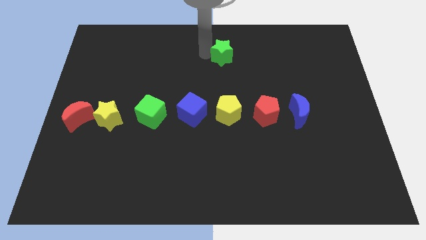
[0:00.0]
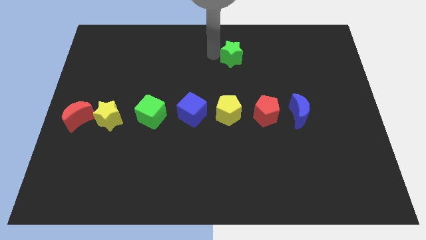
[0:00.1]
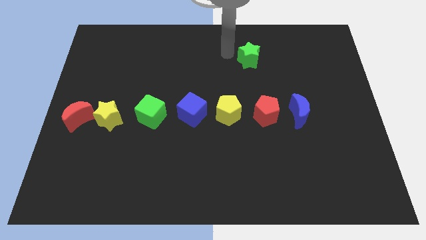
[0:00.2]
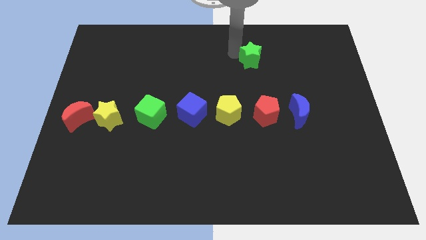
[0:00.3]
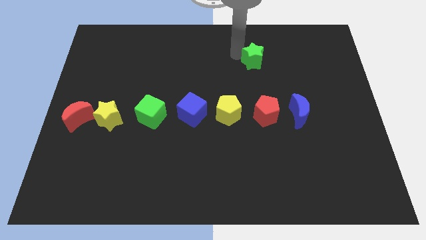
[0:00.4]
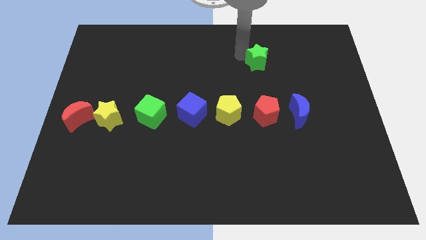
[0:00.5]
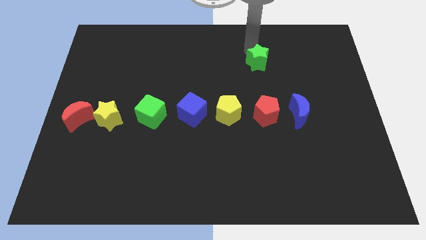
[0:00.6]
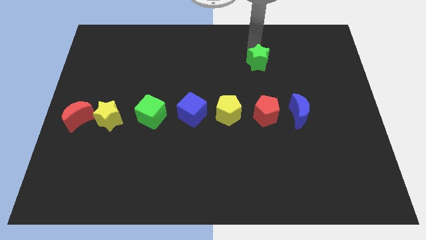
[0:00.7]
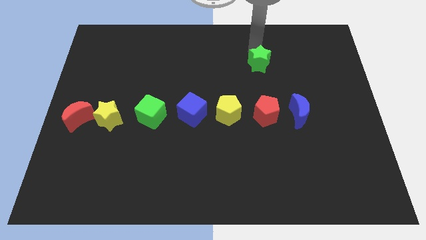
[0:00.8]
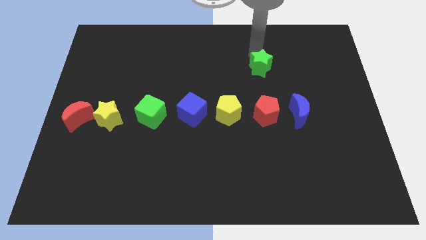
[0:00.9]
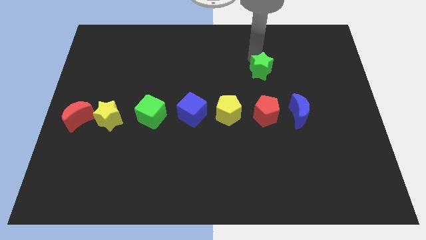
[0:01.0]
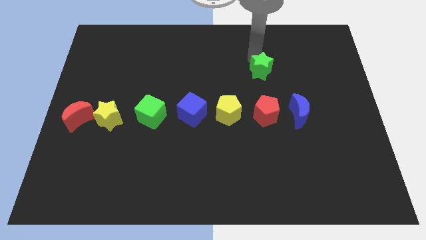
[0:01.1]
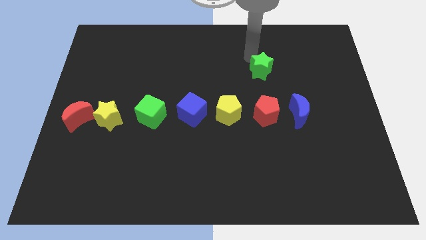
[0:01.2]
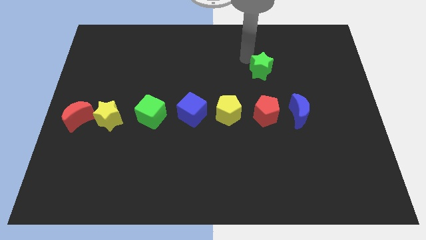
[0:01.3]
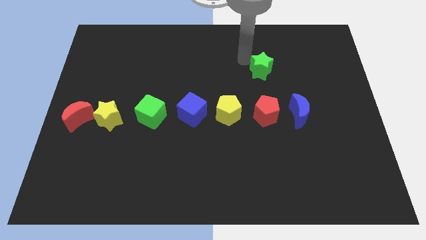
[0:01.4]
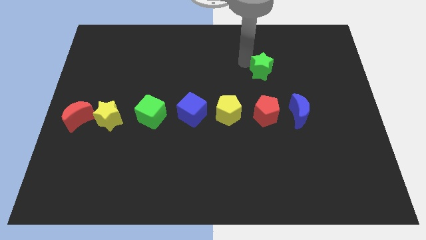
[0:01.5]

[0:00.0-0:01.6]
place the green star parallel to the red pentagon

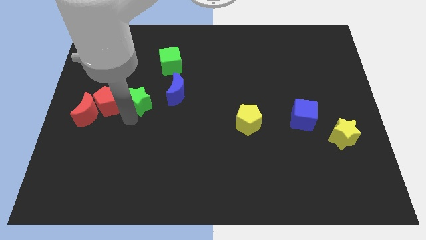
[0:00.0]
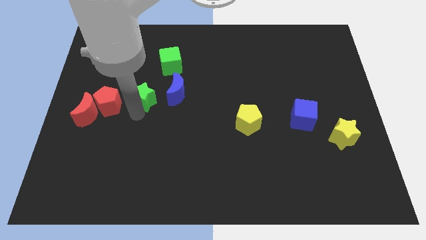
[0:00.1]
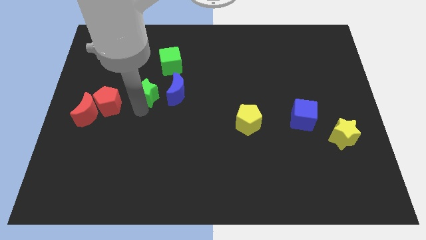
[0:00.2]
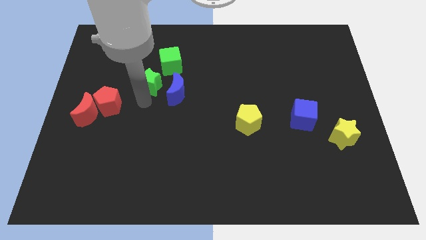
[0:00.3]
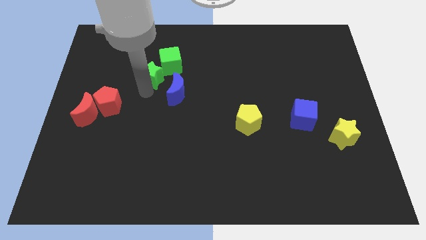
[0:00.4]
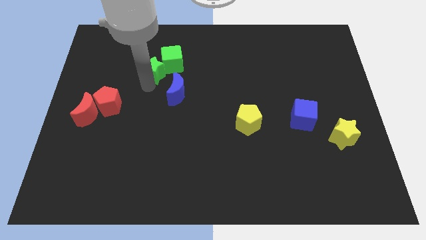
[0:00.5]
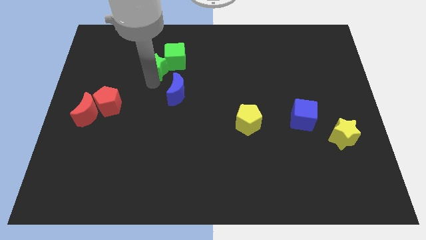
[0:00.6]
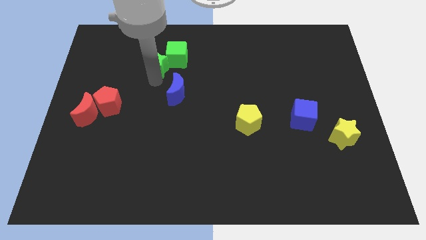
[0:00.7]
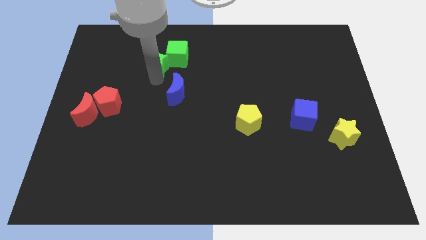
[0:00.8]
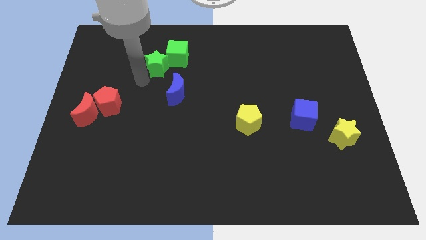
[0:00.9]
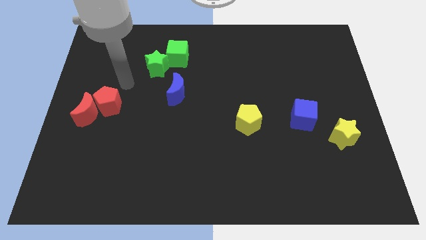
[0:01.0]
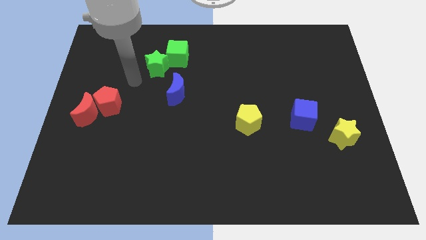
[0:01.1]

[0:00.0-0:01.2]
push the green star into the green cube

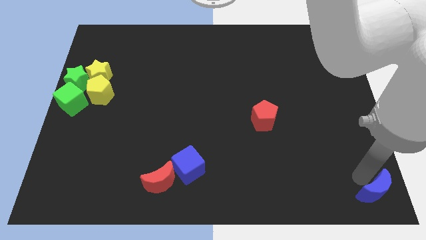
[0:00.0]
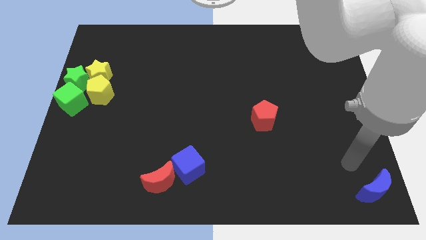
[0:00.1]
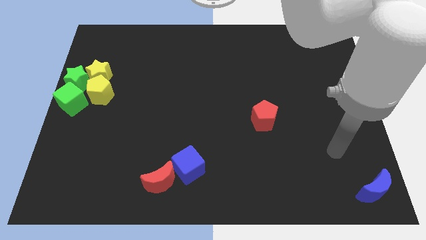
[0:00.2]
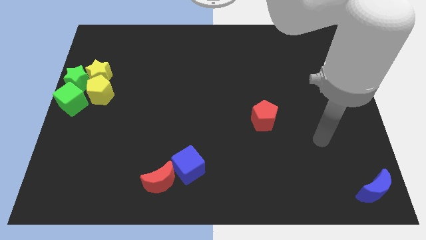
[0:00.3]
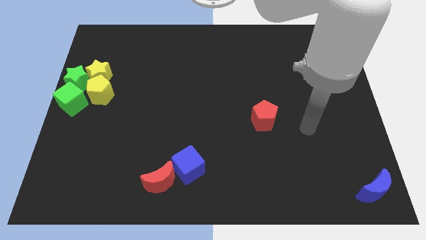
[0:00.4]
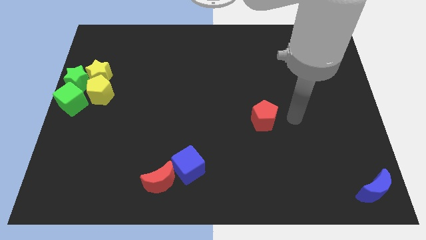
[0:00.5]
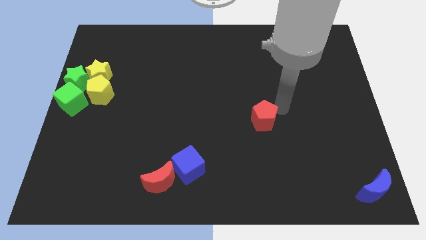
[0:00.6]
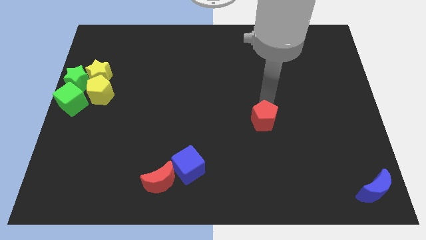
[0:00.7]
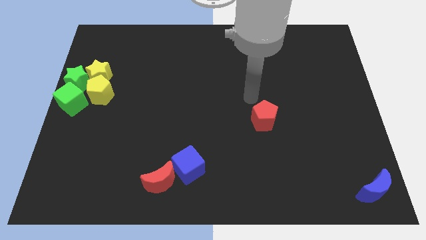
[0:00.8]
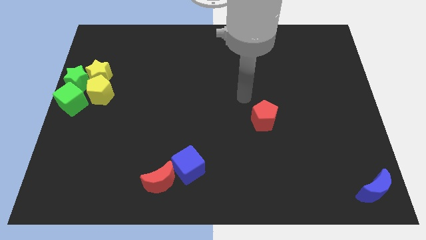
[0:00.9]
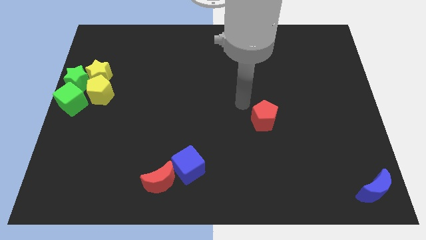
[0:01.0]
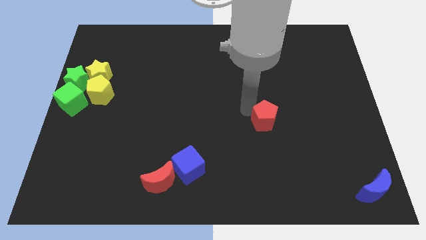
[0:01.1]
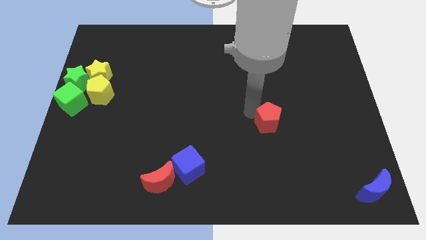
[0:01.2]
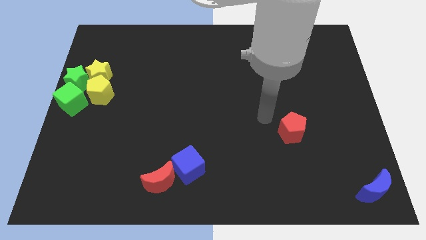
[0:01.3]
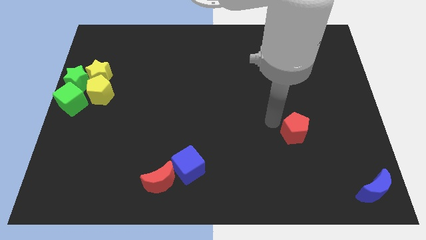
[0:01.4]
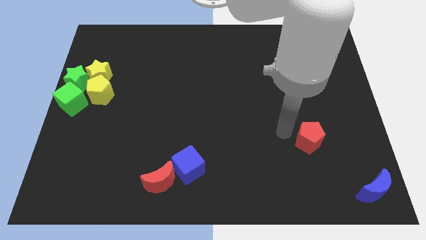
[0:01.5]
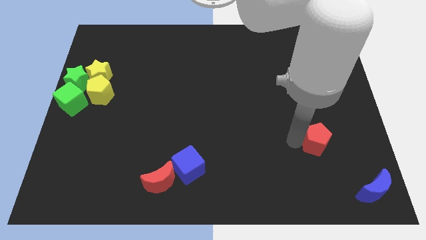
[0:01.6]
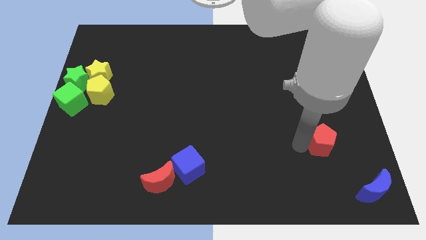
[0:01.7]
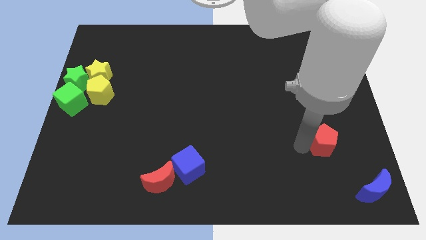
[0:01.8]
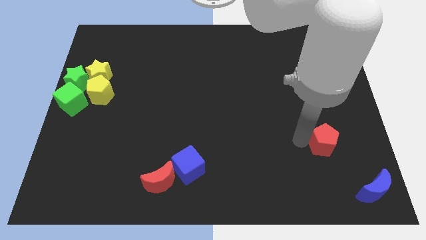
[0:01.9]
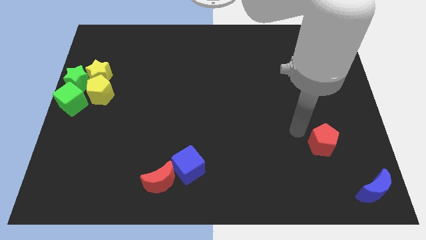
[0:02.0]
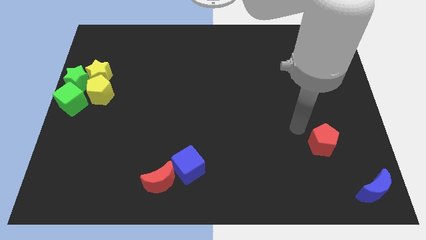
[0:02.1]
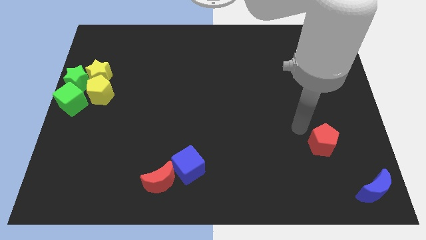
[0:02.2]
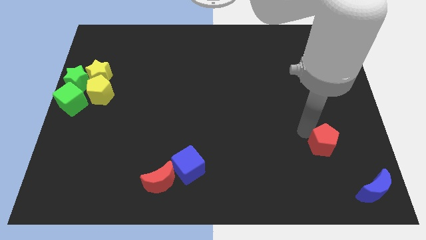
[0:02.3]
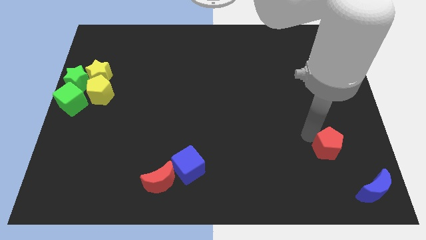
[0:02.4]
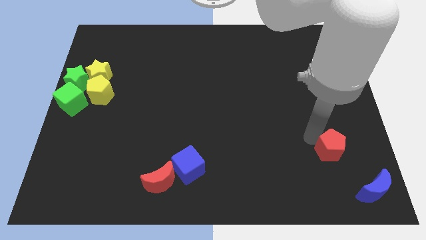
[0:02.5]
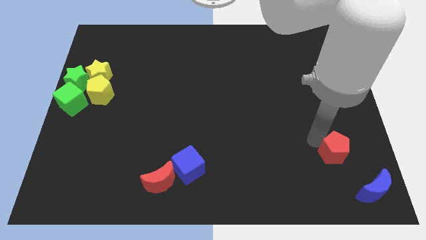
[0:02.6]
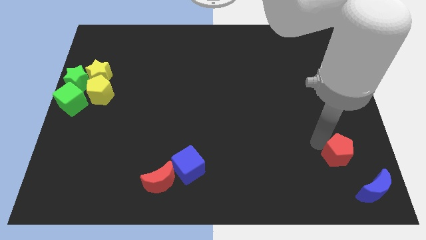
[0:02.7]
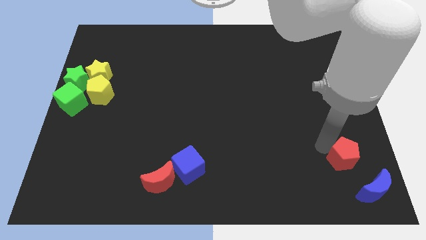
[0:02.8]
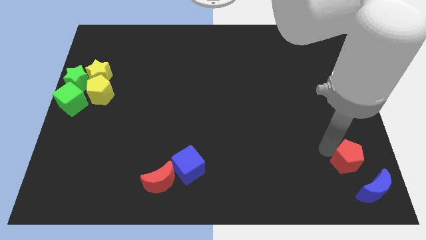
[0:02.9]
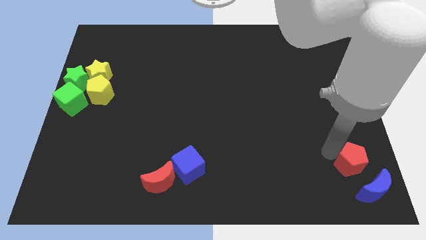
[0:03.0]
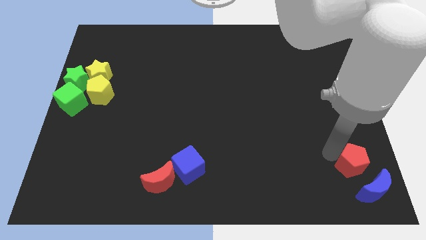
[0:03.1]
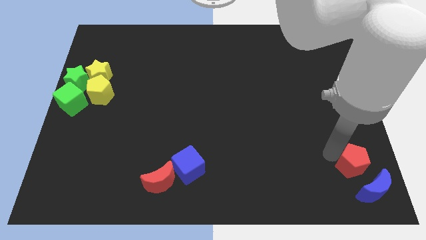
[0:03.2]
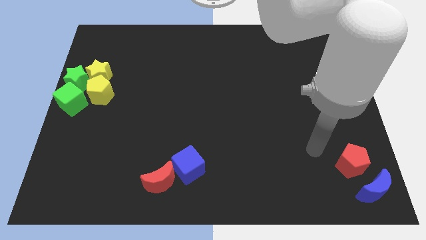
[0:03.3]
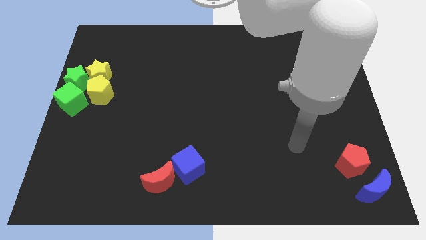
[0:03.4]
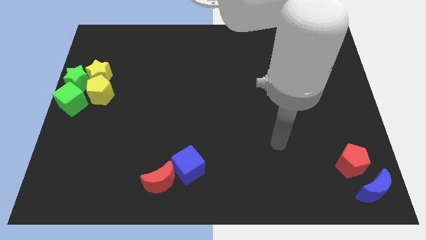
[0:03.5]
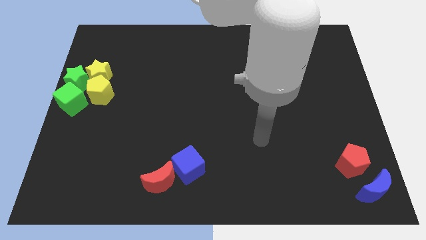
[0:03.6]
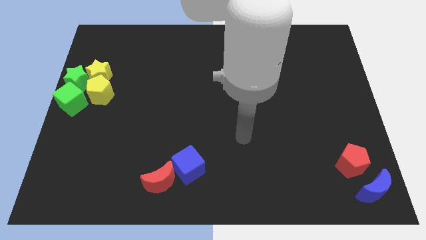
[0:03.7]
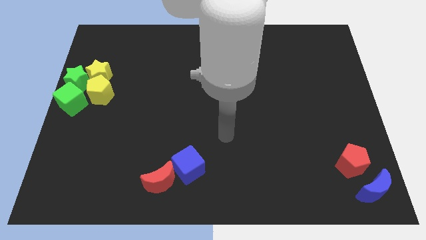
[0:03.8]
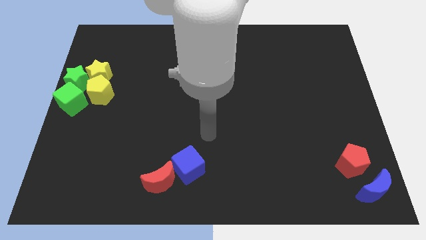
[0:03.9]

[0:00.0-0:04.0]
place red pentagon to the top of blue moon

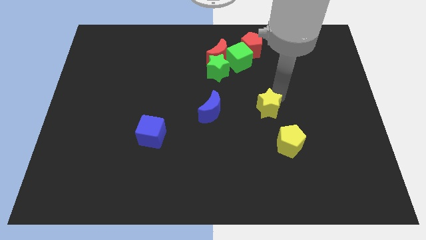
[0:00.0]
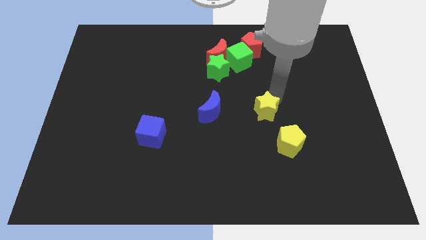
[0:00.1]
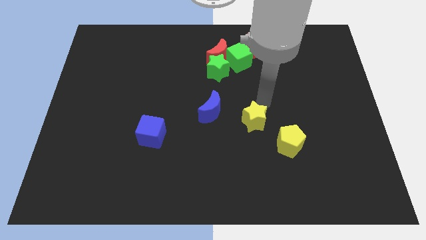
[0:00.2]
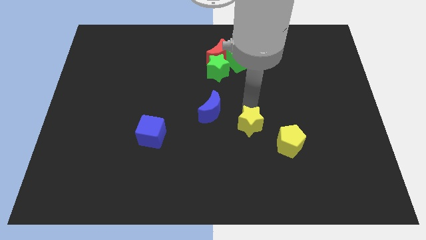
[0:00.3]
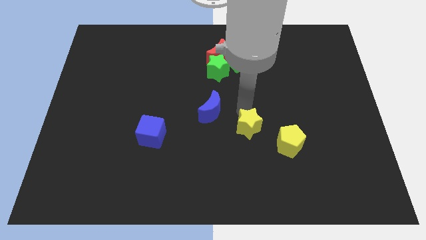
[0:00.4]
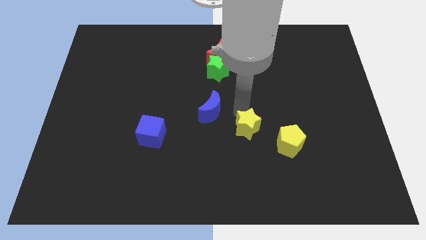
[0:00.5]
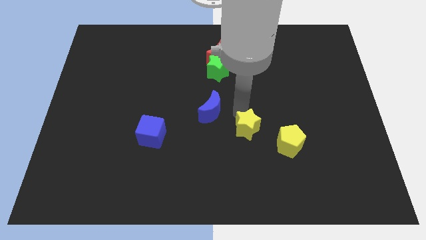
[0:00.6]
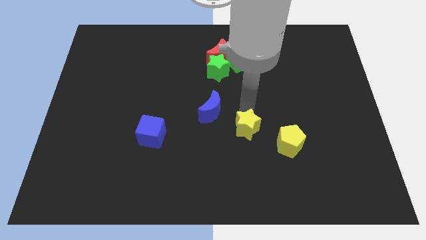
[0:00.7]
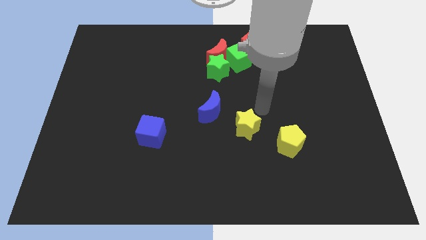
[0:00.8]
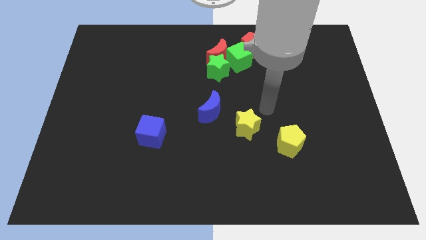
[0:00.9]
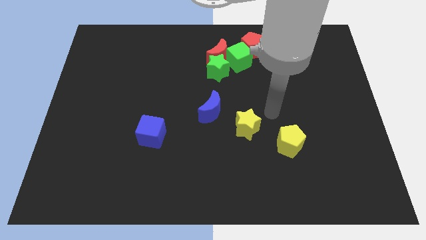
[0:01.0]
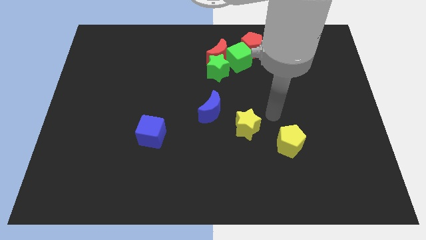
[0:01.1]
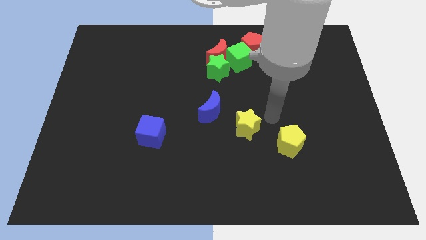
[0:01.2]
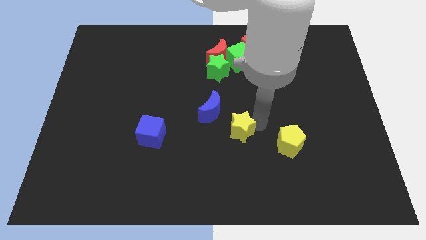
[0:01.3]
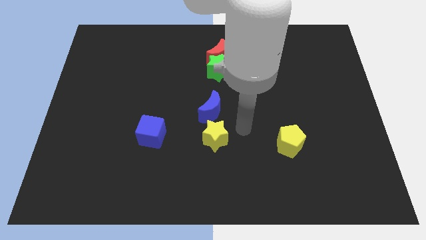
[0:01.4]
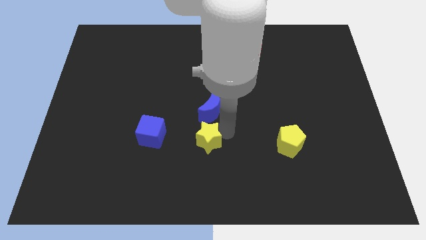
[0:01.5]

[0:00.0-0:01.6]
place yellow star below the blue crescent

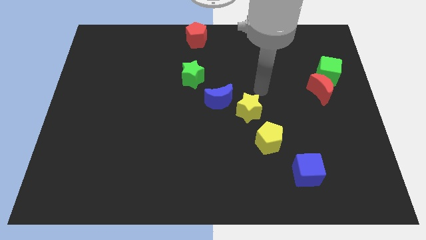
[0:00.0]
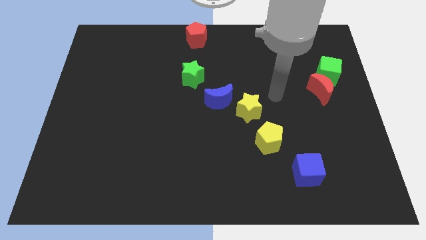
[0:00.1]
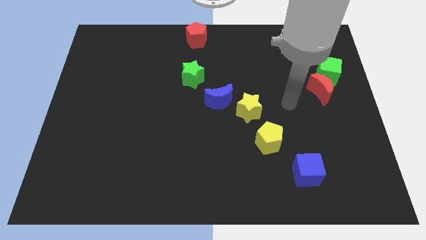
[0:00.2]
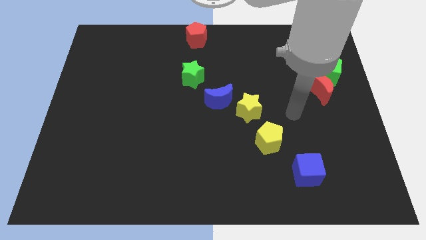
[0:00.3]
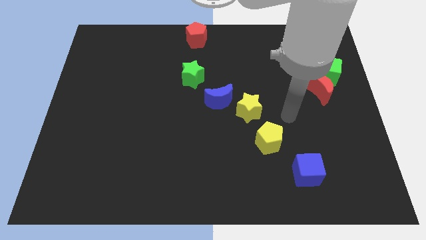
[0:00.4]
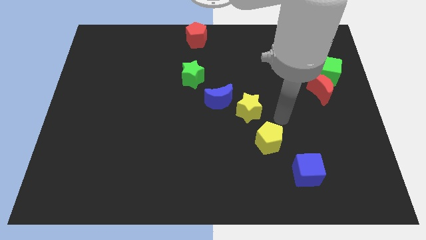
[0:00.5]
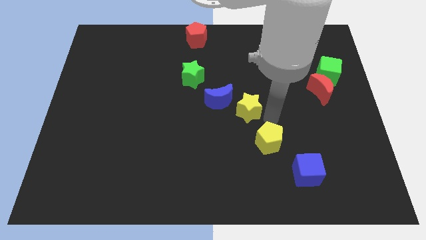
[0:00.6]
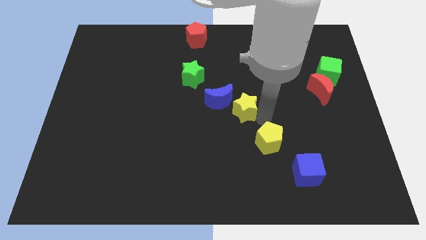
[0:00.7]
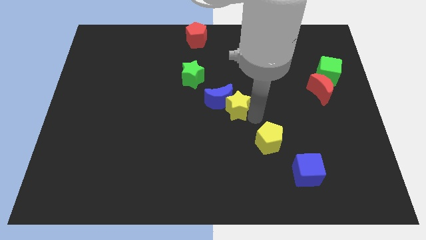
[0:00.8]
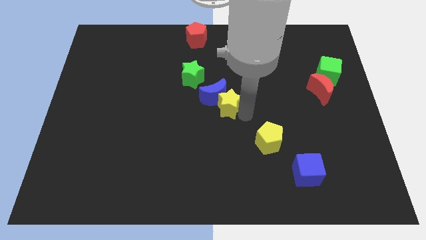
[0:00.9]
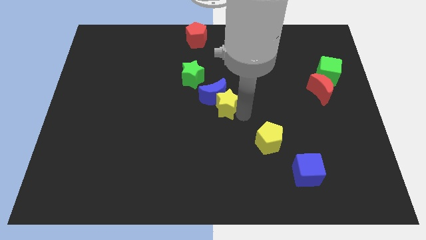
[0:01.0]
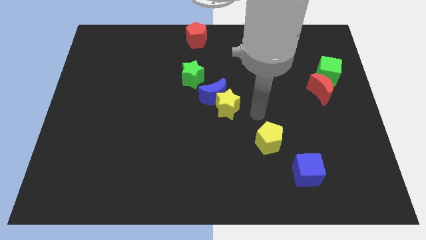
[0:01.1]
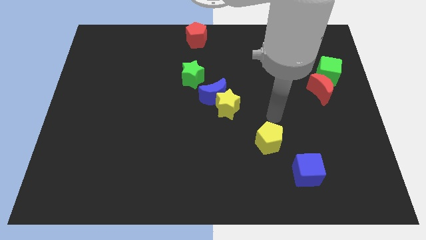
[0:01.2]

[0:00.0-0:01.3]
push the yellow star into the blue moon
